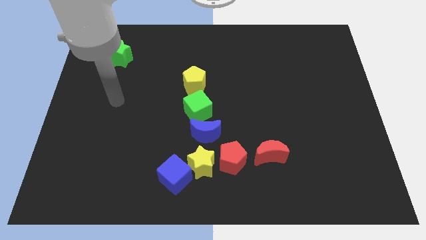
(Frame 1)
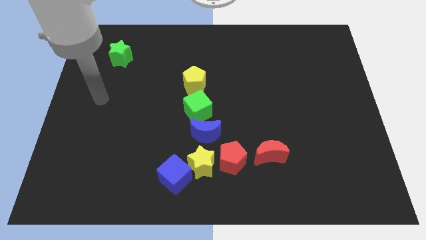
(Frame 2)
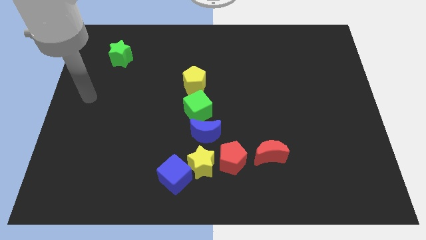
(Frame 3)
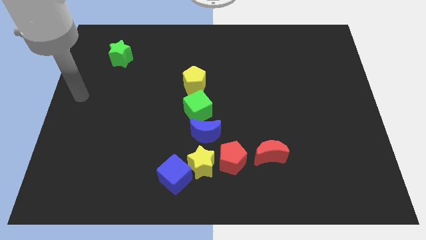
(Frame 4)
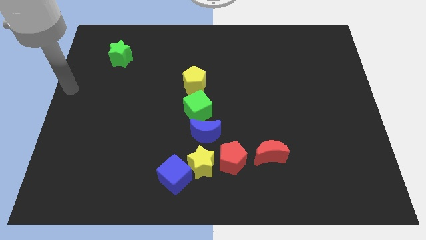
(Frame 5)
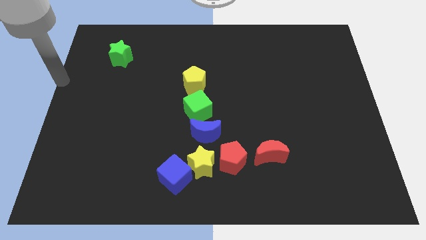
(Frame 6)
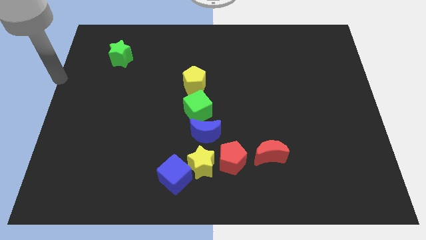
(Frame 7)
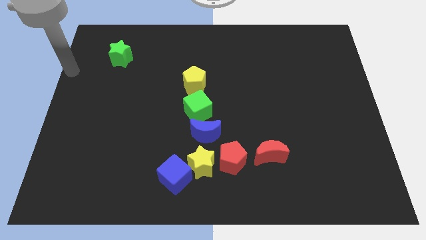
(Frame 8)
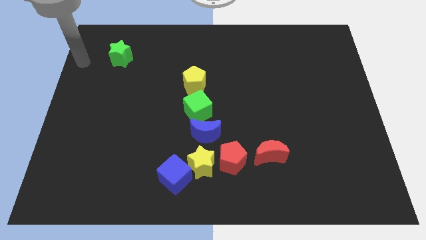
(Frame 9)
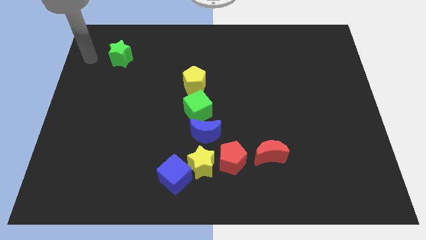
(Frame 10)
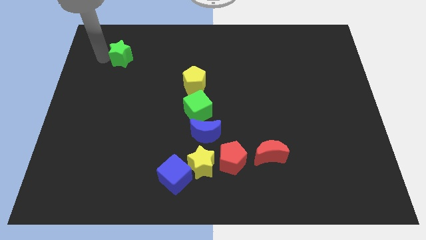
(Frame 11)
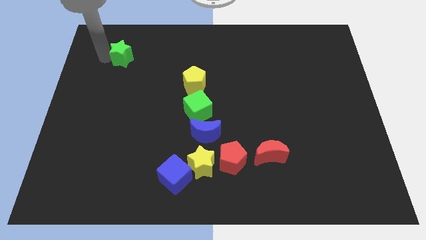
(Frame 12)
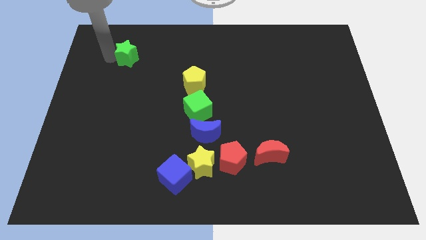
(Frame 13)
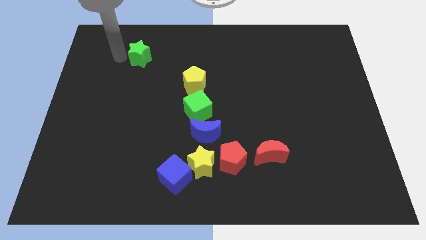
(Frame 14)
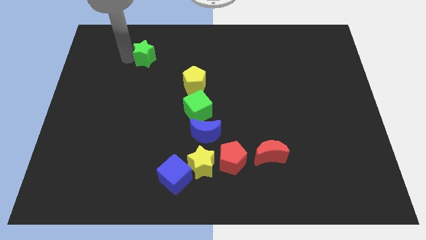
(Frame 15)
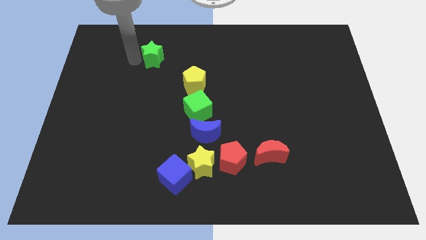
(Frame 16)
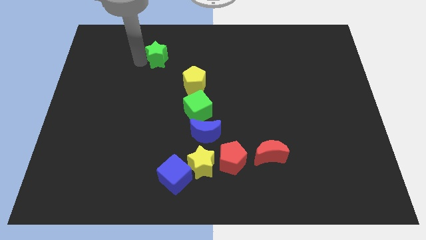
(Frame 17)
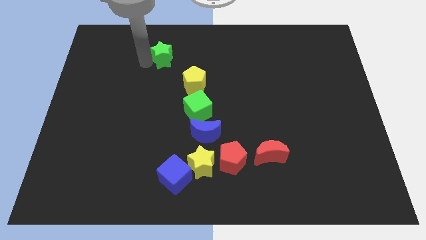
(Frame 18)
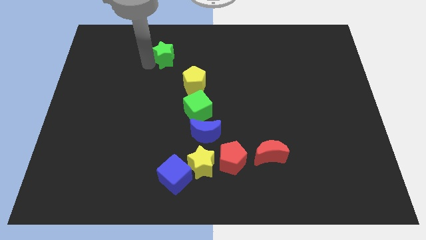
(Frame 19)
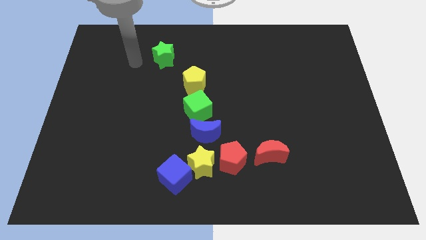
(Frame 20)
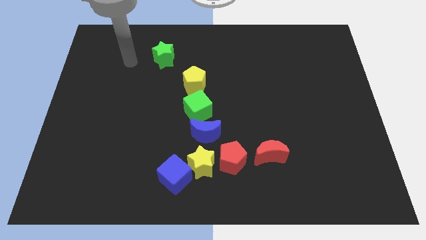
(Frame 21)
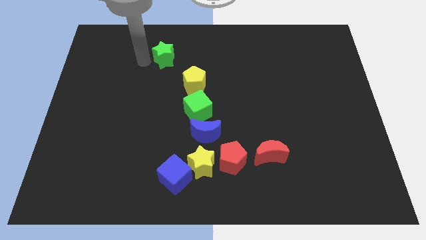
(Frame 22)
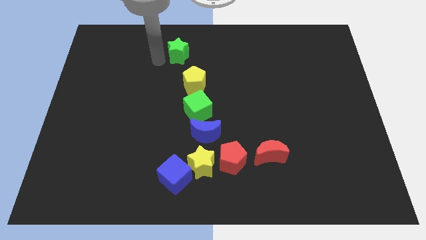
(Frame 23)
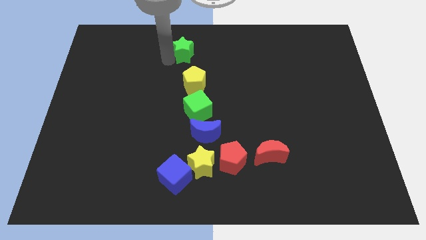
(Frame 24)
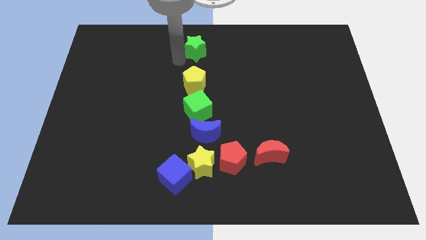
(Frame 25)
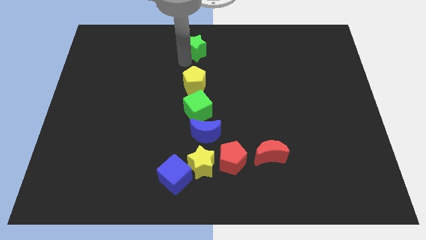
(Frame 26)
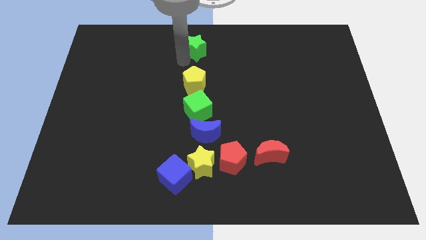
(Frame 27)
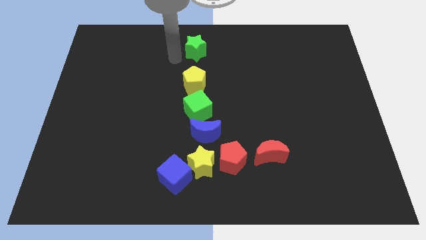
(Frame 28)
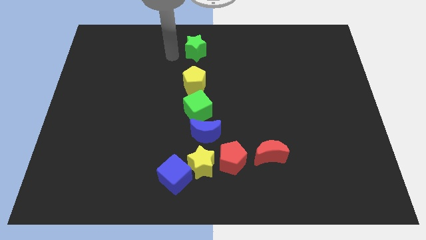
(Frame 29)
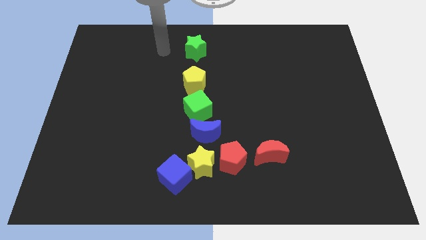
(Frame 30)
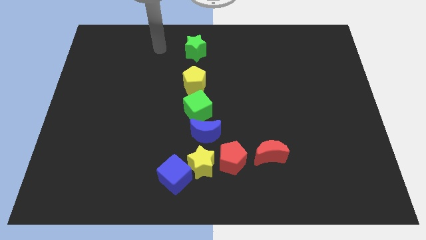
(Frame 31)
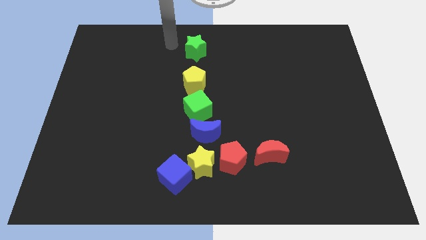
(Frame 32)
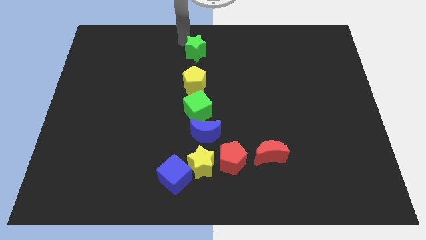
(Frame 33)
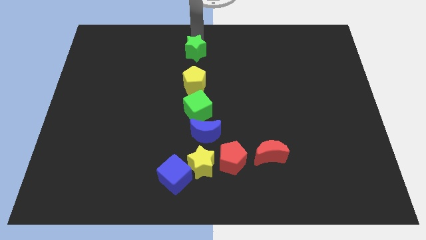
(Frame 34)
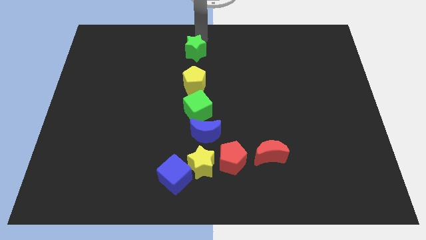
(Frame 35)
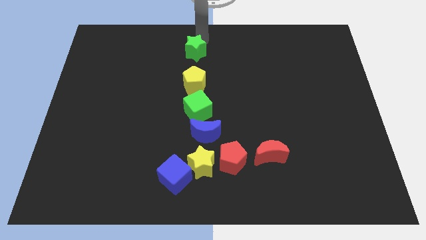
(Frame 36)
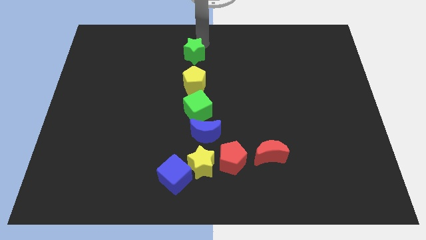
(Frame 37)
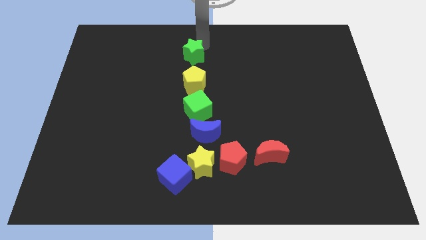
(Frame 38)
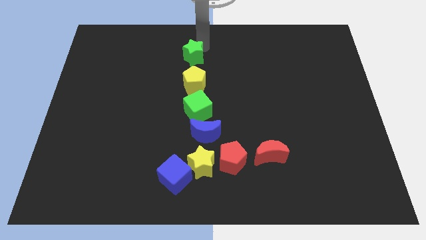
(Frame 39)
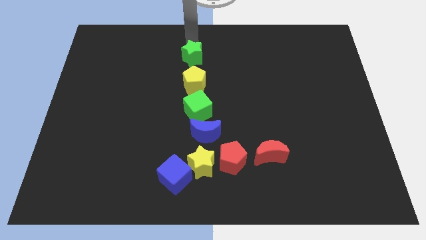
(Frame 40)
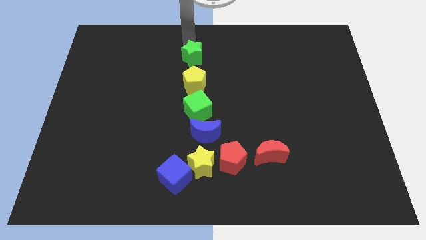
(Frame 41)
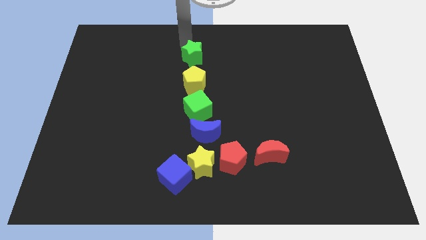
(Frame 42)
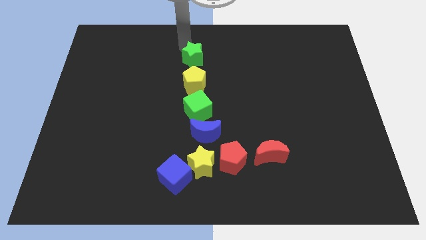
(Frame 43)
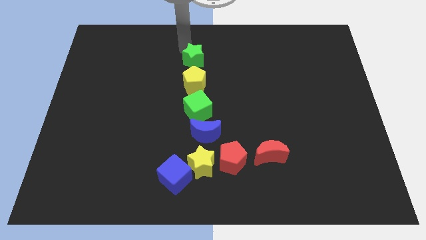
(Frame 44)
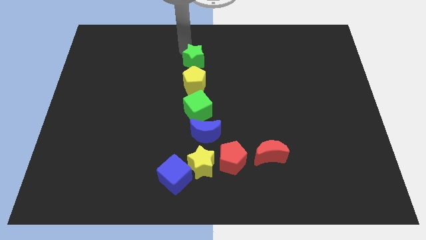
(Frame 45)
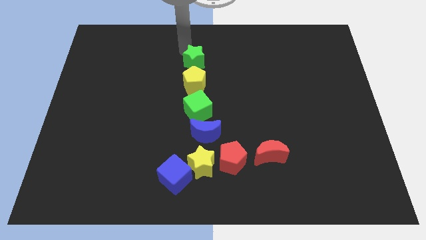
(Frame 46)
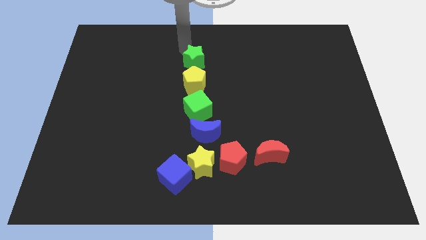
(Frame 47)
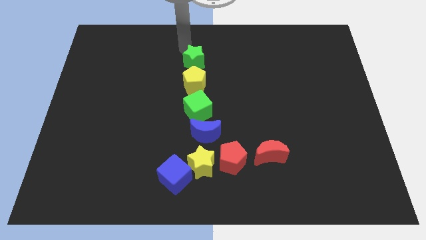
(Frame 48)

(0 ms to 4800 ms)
move green star above yellow pentagon

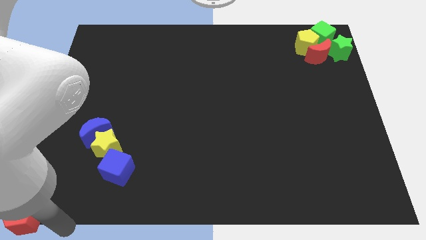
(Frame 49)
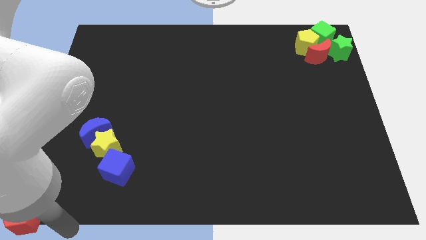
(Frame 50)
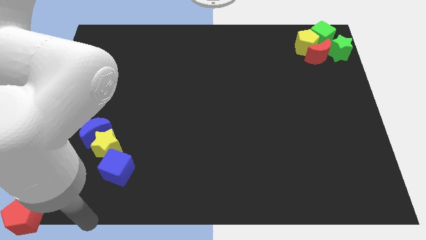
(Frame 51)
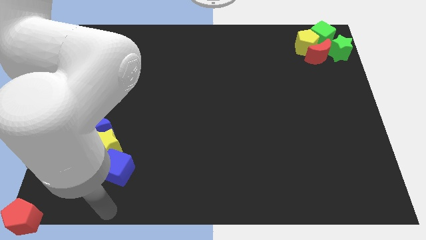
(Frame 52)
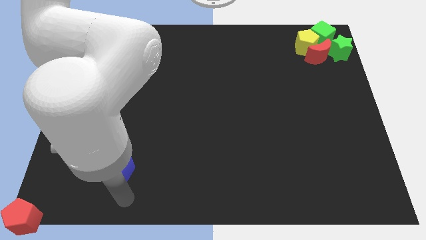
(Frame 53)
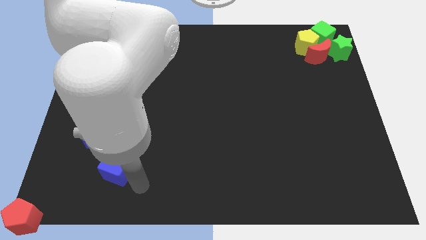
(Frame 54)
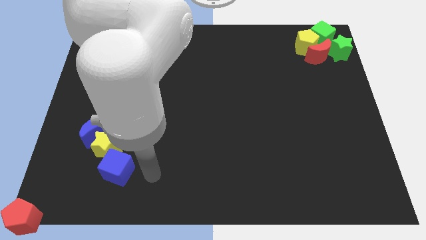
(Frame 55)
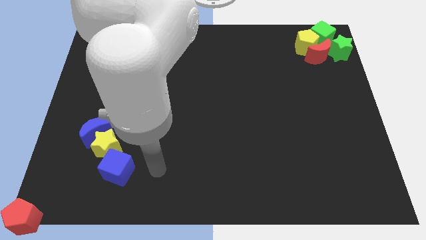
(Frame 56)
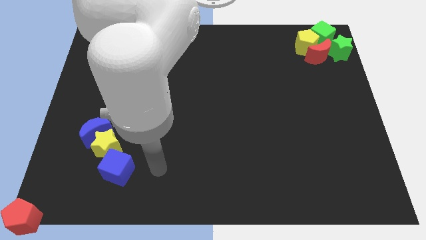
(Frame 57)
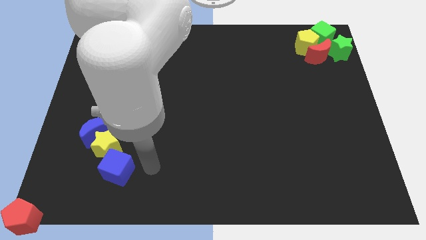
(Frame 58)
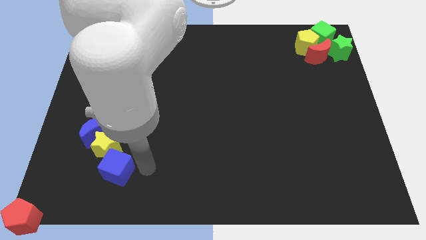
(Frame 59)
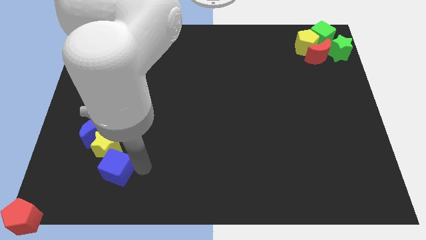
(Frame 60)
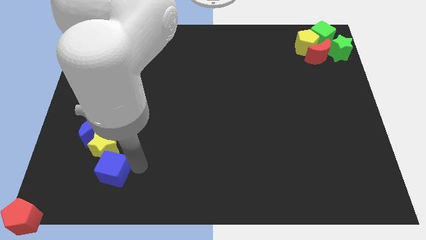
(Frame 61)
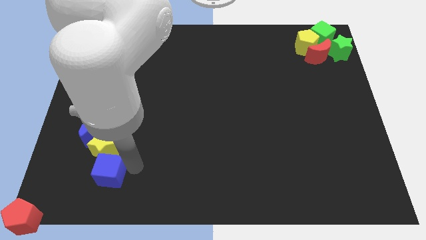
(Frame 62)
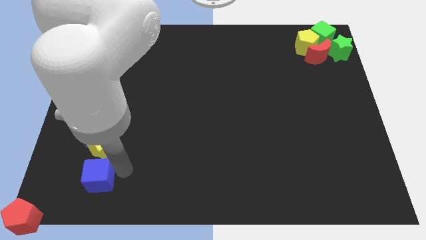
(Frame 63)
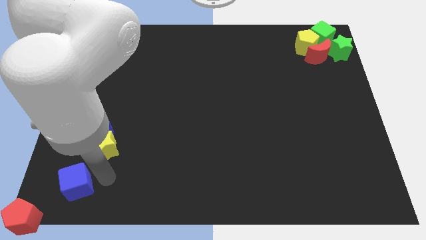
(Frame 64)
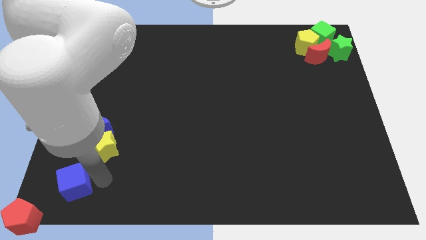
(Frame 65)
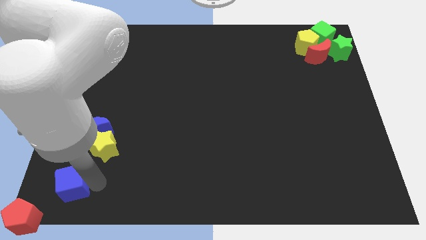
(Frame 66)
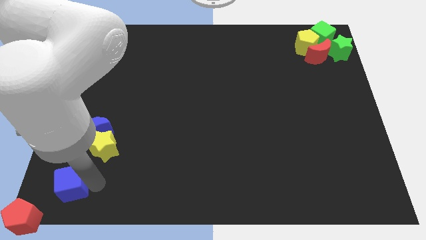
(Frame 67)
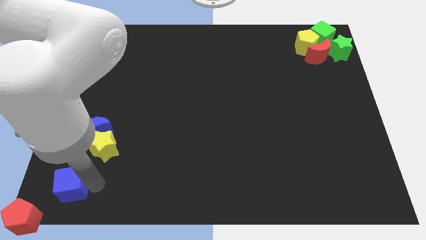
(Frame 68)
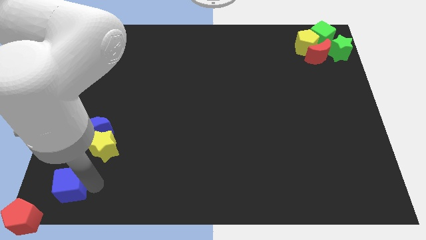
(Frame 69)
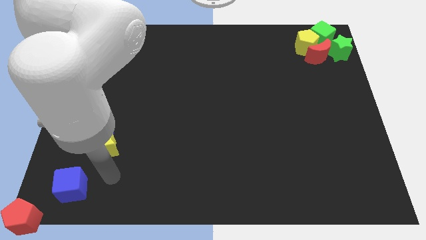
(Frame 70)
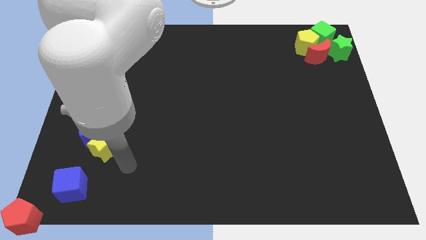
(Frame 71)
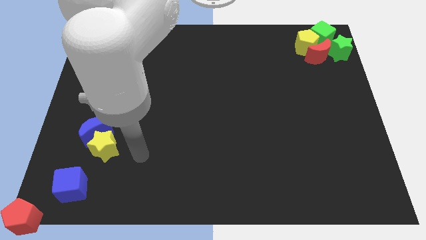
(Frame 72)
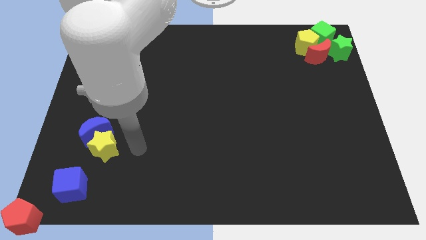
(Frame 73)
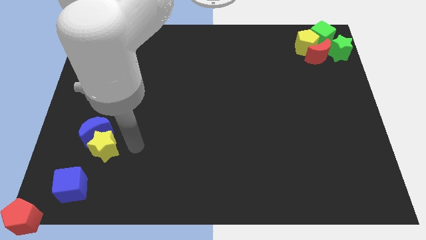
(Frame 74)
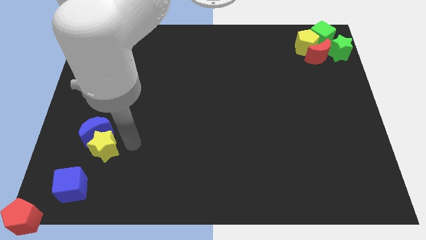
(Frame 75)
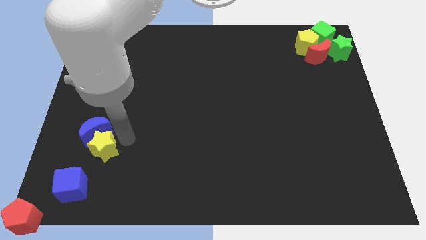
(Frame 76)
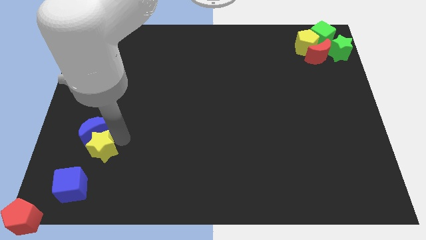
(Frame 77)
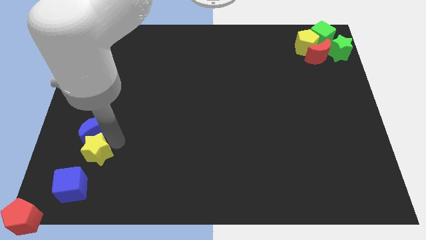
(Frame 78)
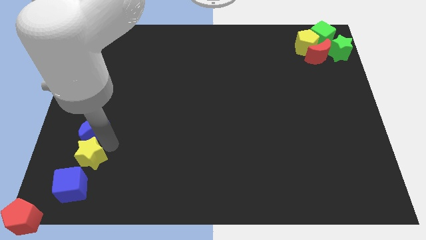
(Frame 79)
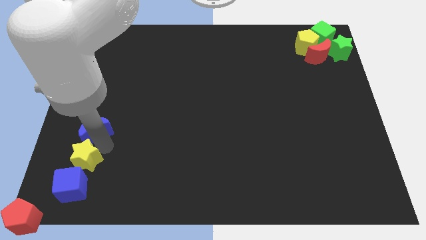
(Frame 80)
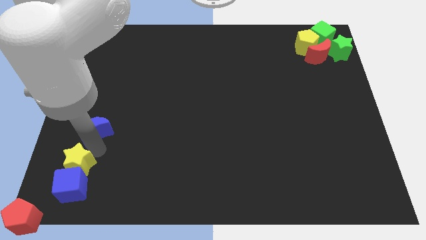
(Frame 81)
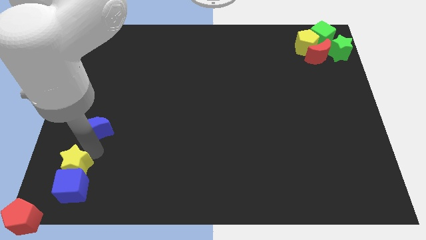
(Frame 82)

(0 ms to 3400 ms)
push the blue cube and yellow star towards the red pentagon

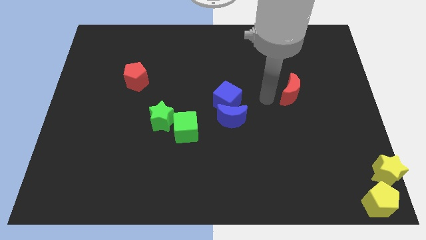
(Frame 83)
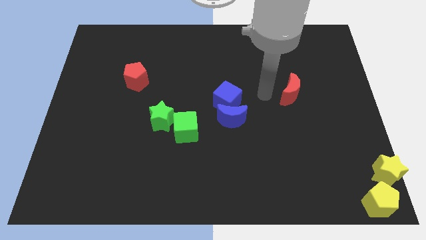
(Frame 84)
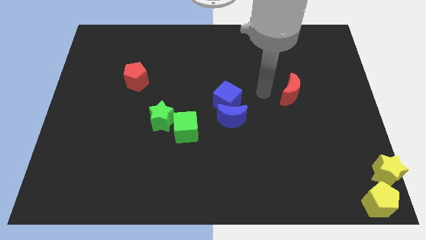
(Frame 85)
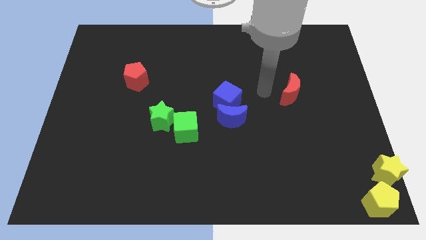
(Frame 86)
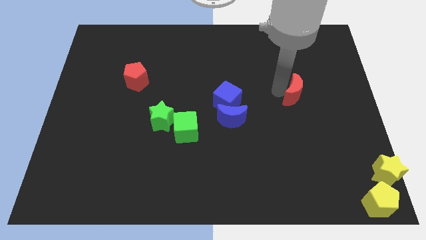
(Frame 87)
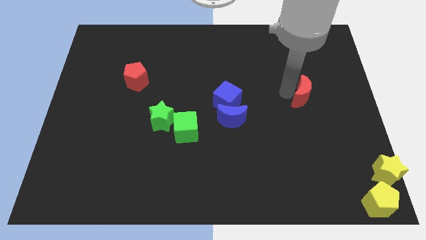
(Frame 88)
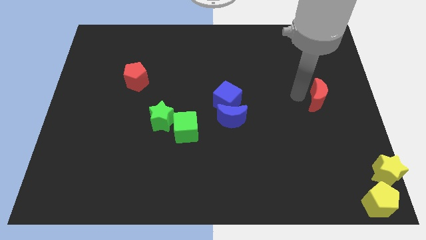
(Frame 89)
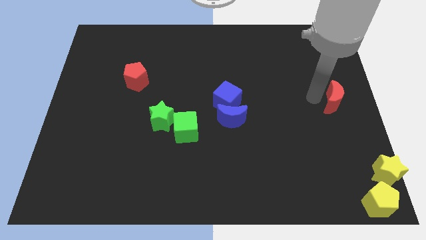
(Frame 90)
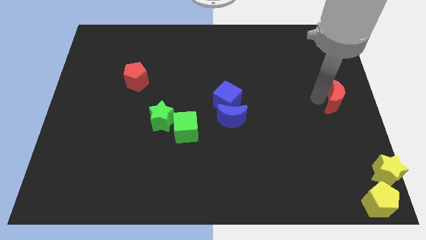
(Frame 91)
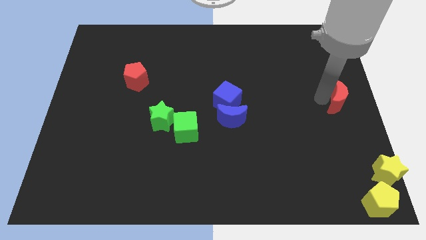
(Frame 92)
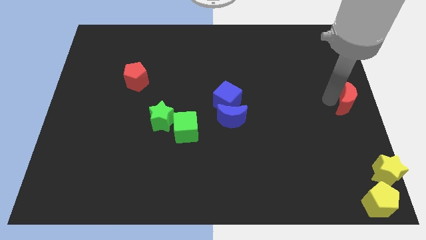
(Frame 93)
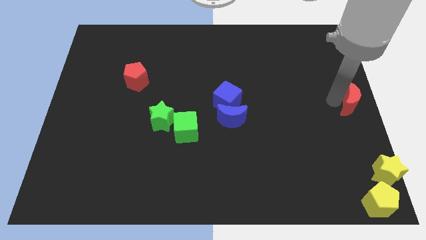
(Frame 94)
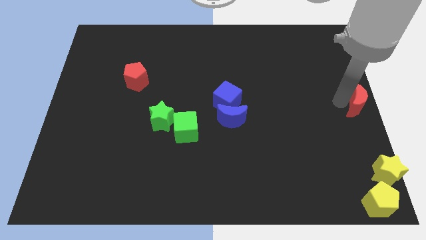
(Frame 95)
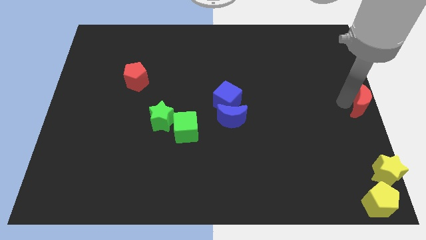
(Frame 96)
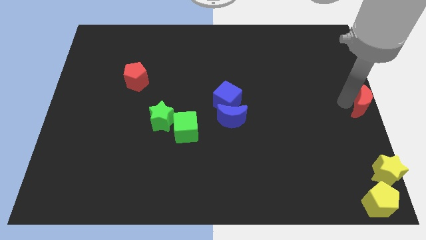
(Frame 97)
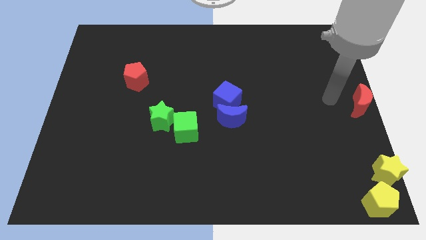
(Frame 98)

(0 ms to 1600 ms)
push the red moon to the center right
